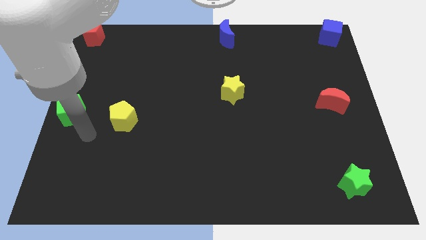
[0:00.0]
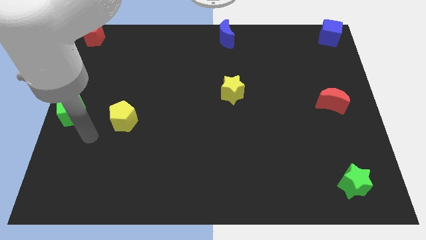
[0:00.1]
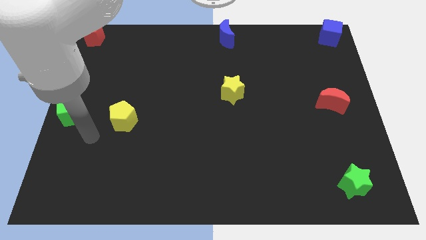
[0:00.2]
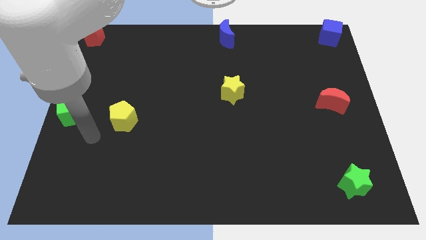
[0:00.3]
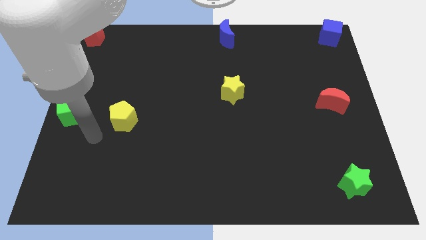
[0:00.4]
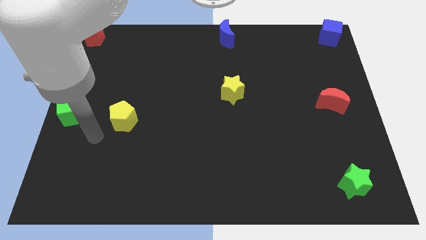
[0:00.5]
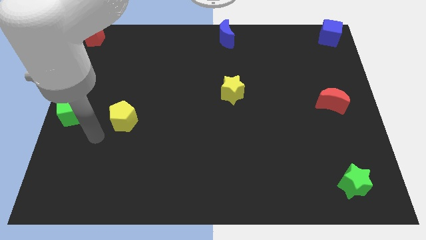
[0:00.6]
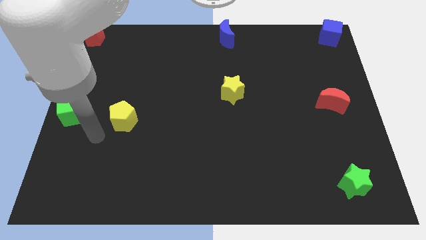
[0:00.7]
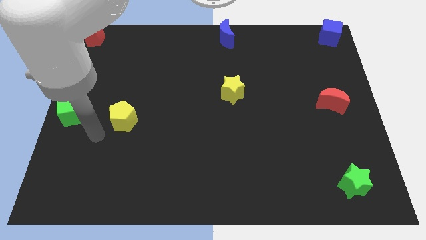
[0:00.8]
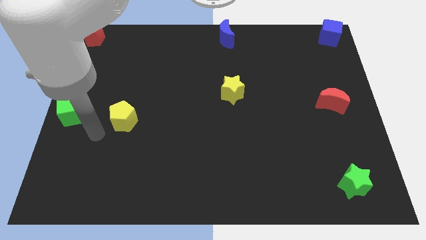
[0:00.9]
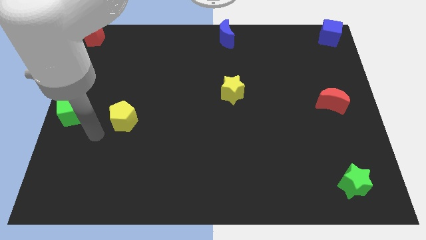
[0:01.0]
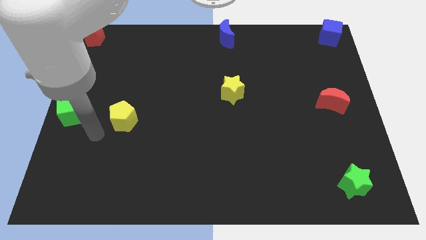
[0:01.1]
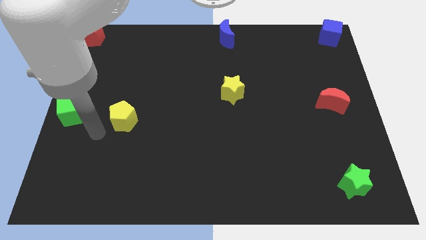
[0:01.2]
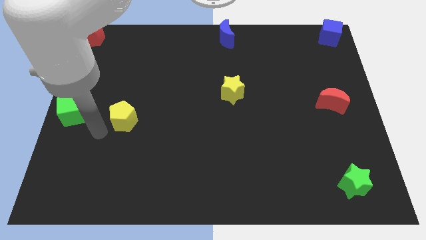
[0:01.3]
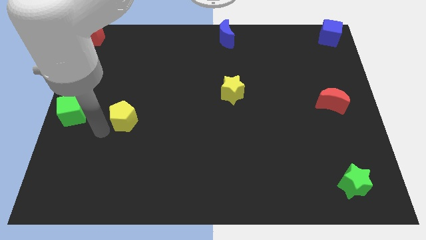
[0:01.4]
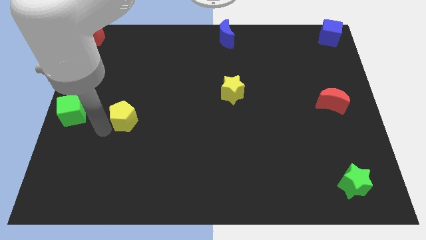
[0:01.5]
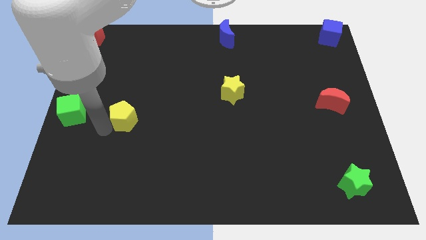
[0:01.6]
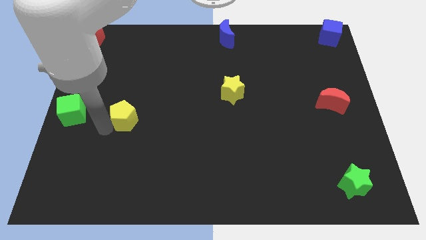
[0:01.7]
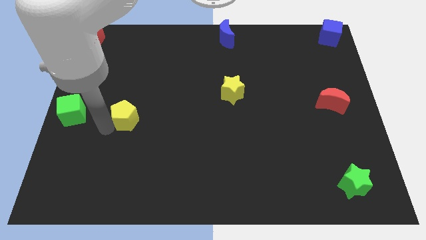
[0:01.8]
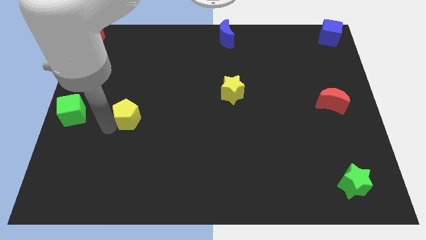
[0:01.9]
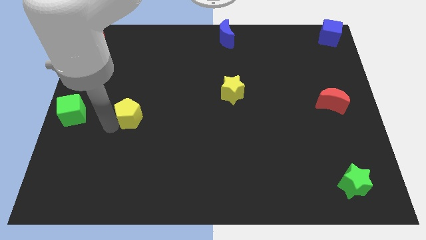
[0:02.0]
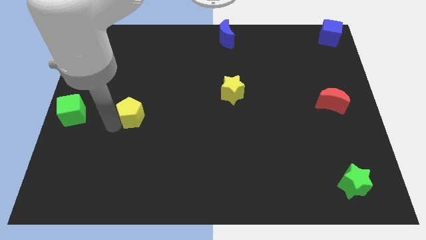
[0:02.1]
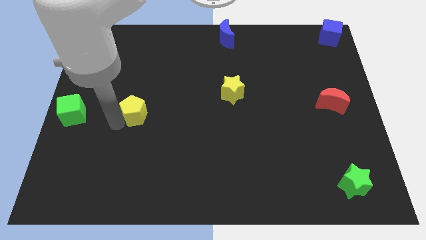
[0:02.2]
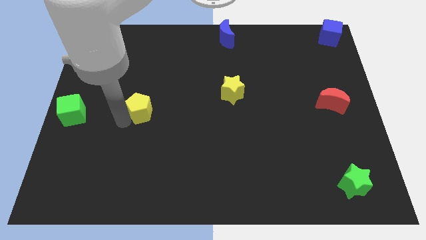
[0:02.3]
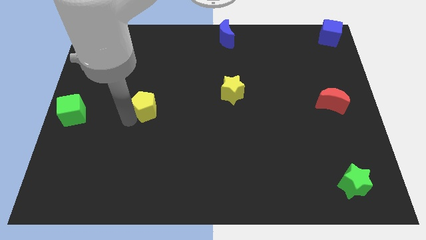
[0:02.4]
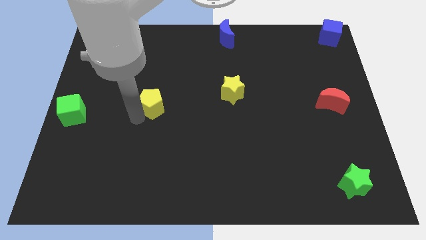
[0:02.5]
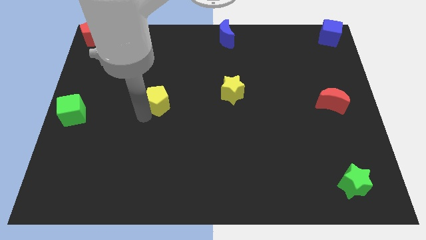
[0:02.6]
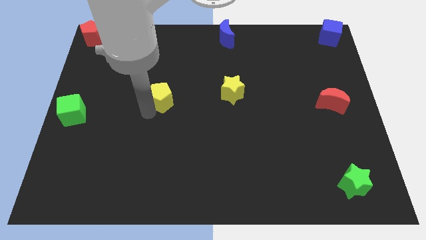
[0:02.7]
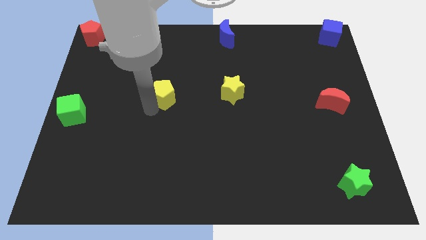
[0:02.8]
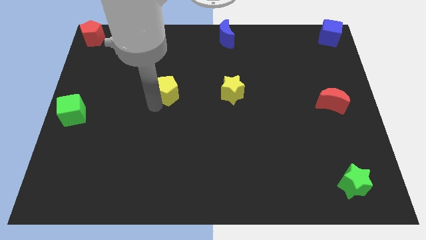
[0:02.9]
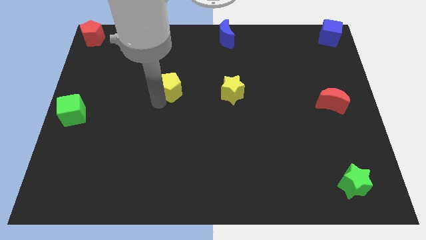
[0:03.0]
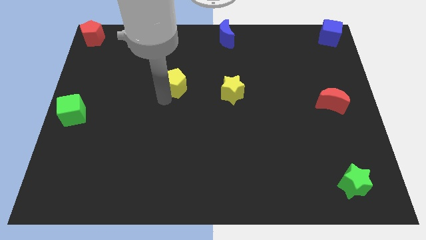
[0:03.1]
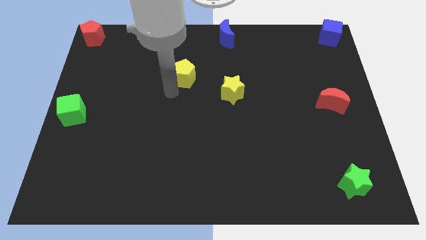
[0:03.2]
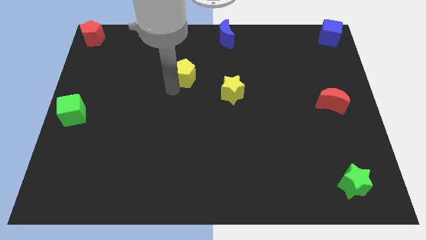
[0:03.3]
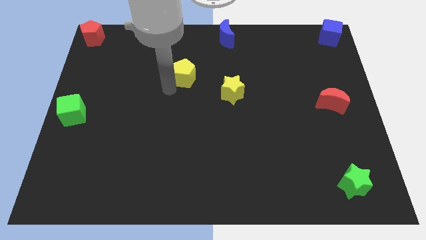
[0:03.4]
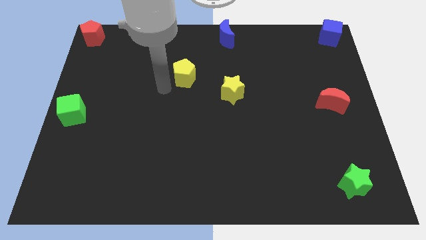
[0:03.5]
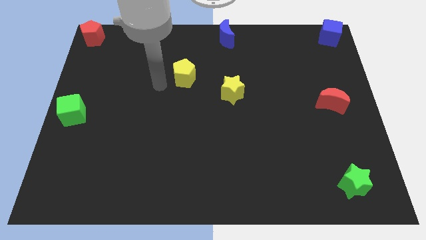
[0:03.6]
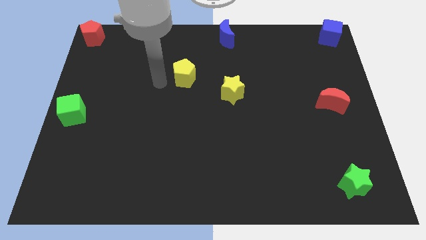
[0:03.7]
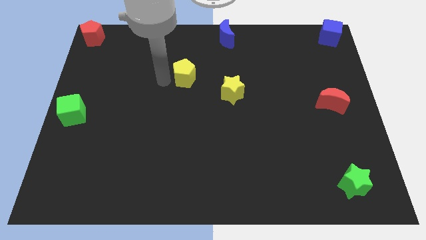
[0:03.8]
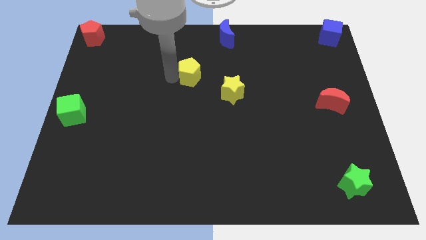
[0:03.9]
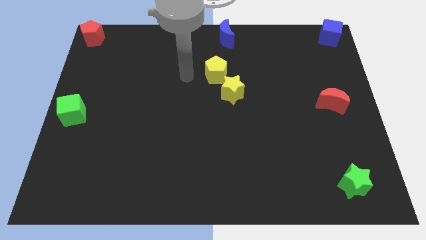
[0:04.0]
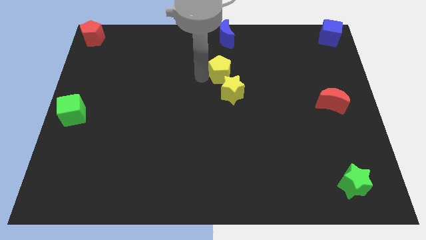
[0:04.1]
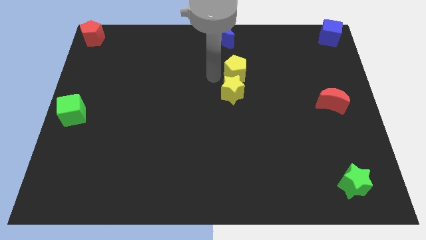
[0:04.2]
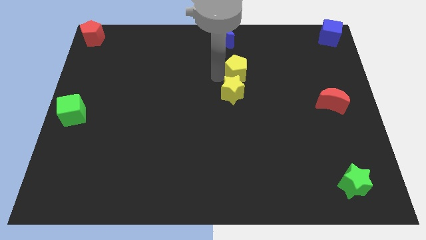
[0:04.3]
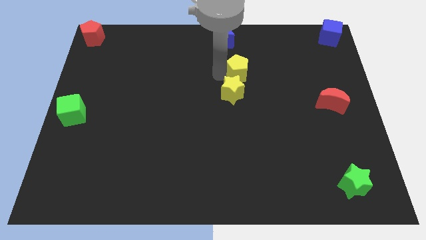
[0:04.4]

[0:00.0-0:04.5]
move the yellow pentagon towards the center of the board

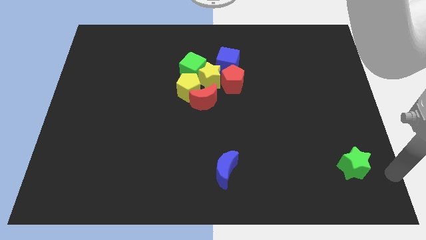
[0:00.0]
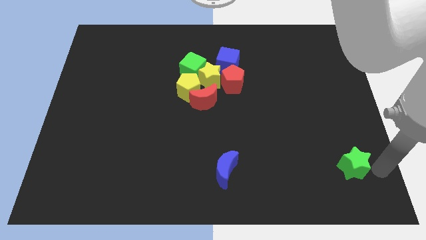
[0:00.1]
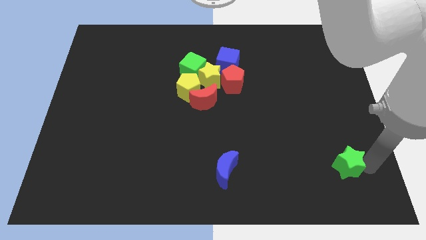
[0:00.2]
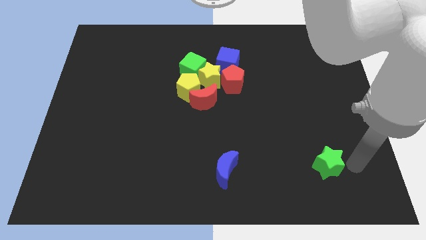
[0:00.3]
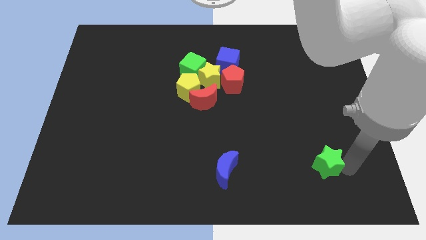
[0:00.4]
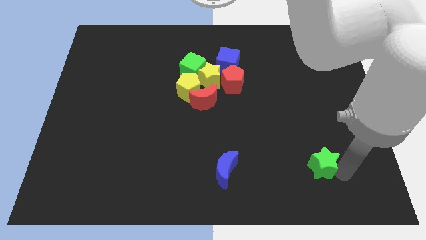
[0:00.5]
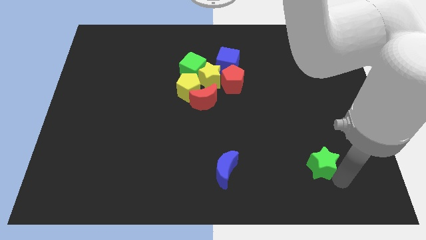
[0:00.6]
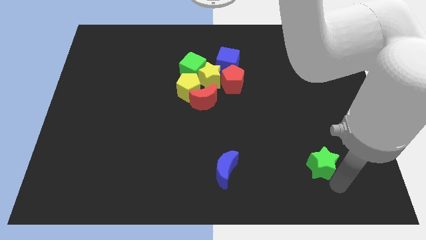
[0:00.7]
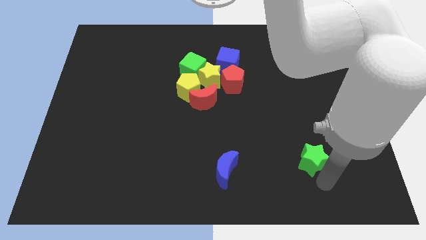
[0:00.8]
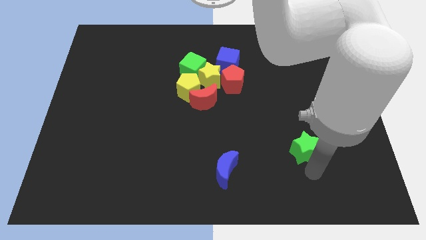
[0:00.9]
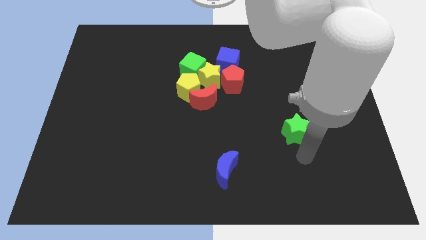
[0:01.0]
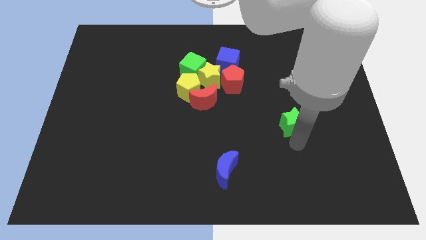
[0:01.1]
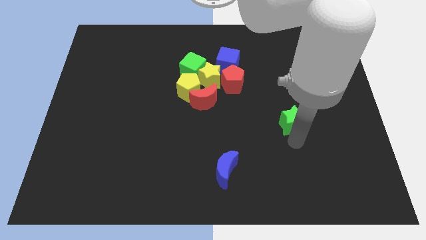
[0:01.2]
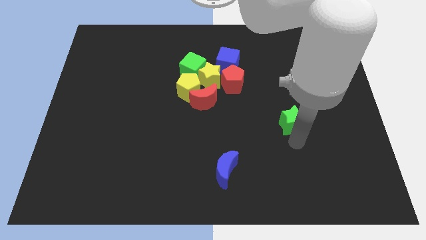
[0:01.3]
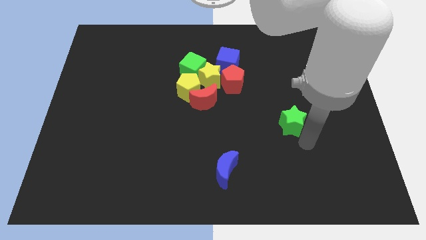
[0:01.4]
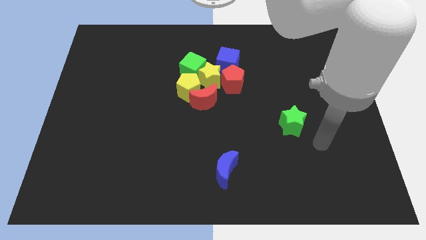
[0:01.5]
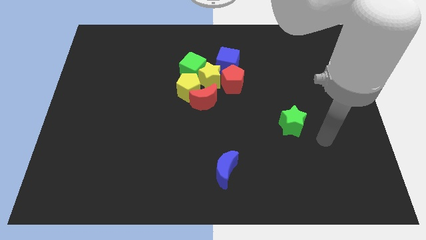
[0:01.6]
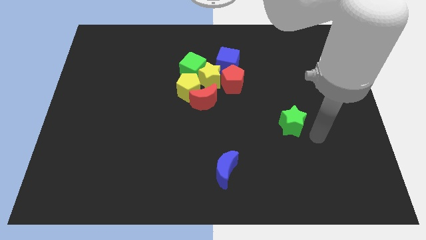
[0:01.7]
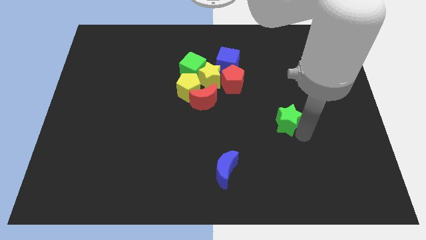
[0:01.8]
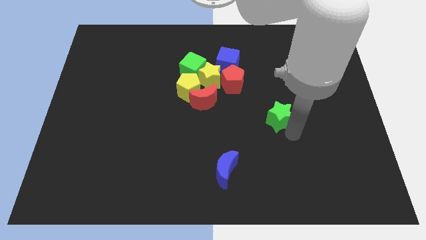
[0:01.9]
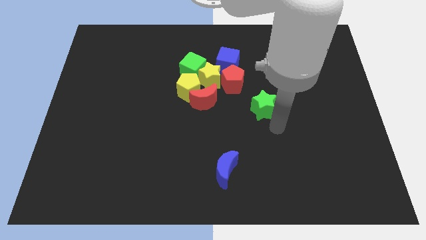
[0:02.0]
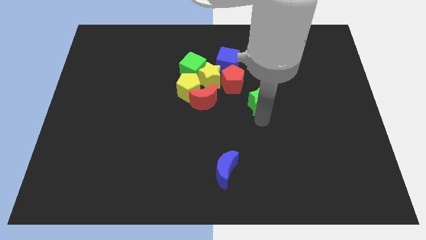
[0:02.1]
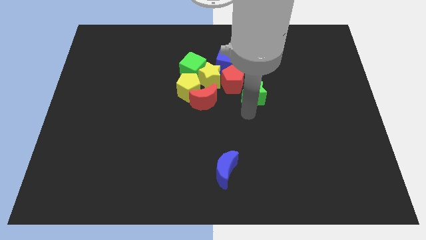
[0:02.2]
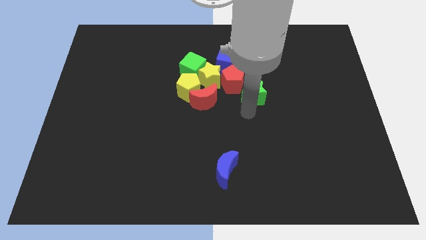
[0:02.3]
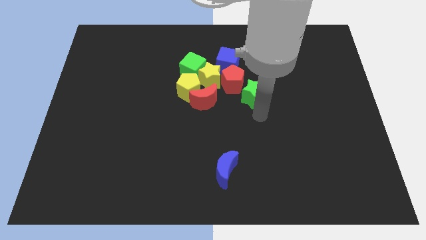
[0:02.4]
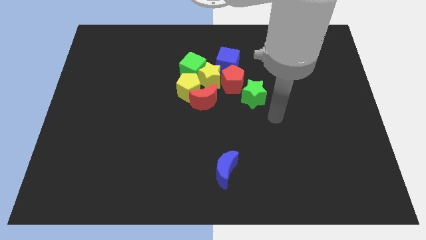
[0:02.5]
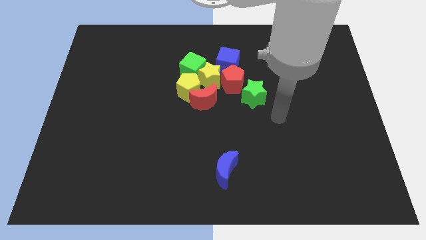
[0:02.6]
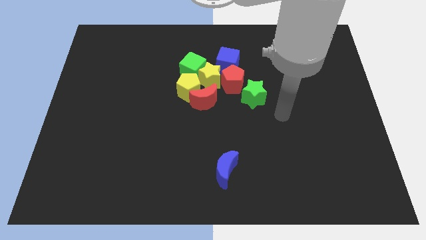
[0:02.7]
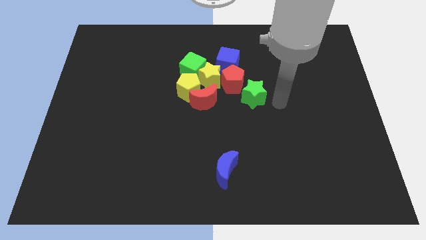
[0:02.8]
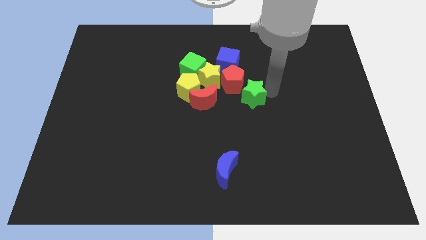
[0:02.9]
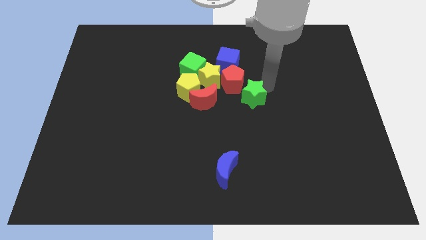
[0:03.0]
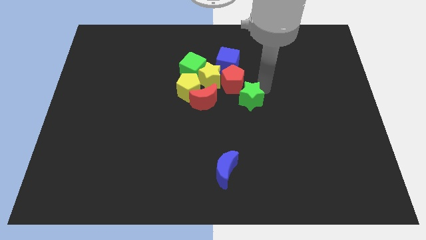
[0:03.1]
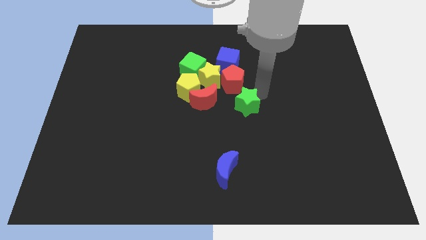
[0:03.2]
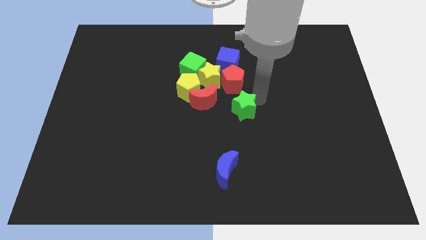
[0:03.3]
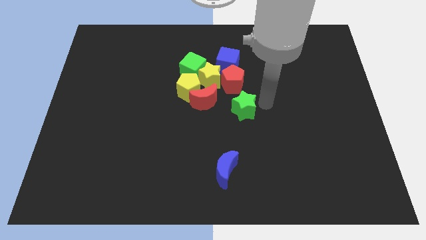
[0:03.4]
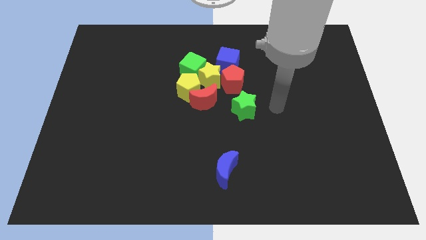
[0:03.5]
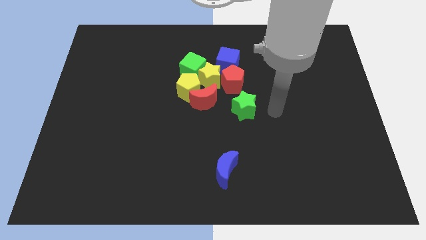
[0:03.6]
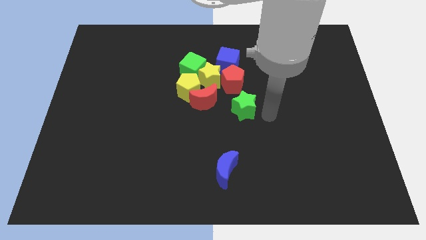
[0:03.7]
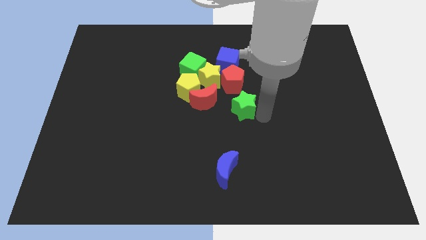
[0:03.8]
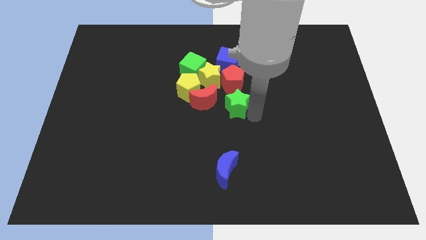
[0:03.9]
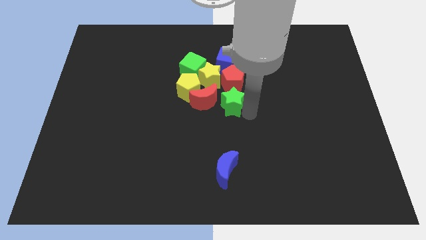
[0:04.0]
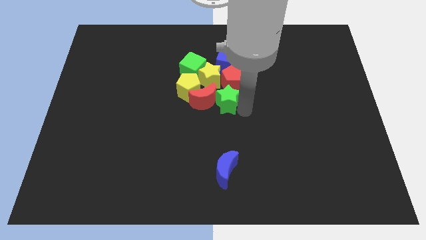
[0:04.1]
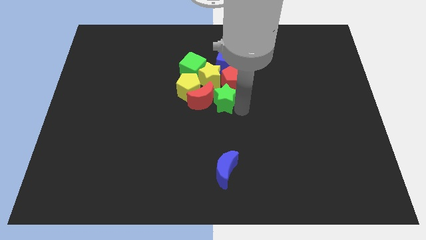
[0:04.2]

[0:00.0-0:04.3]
move the green star into the group of blocks
